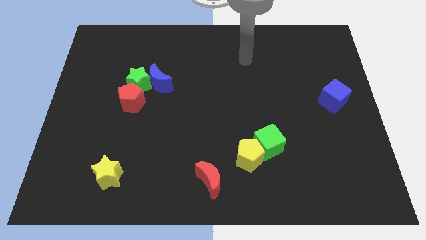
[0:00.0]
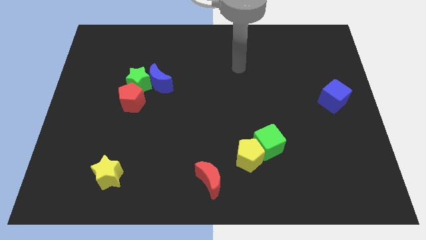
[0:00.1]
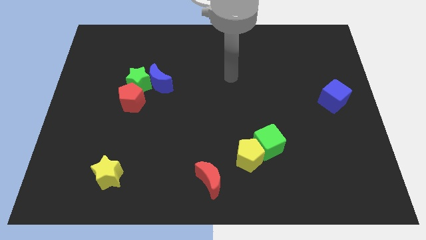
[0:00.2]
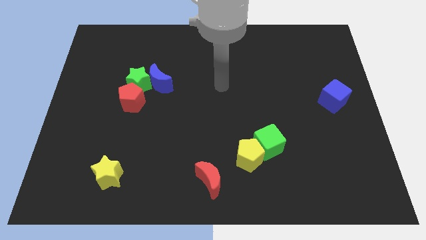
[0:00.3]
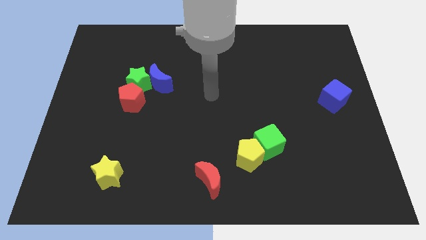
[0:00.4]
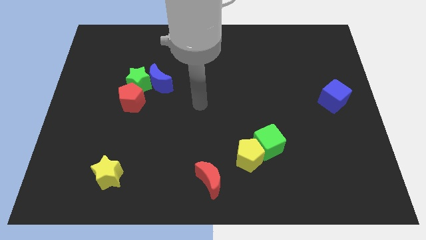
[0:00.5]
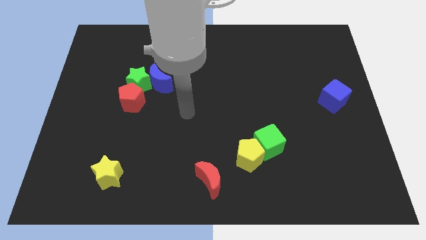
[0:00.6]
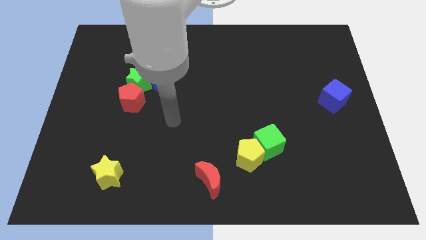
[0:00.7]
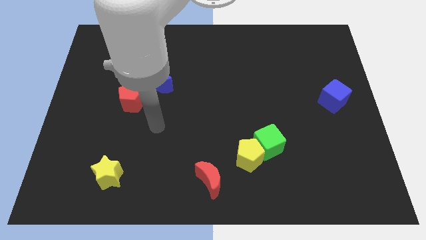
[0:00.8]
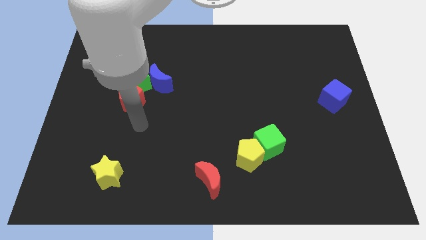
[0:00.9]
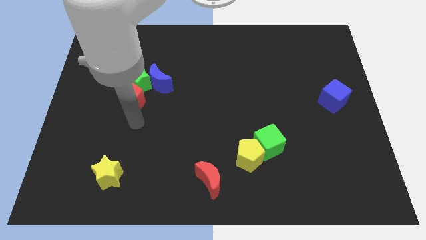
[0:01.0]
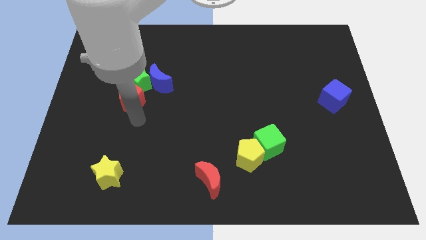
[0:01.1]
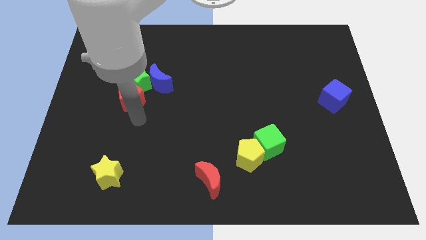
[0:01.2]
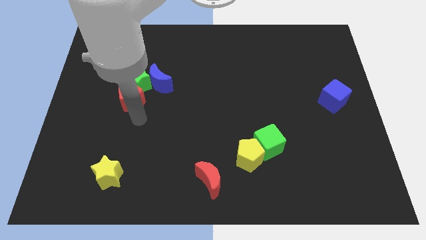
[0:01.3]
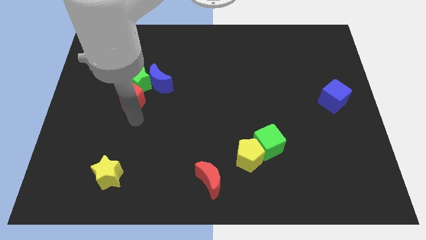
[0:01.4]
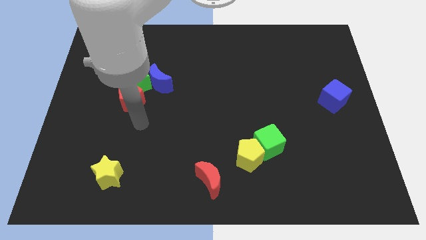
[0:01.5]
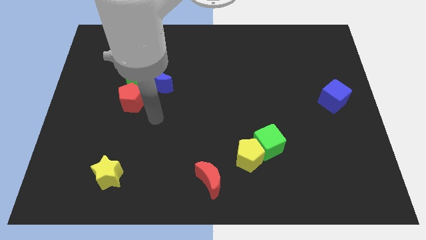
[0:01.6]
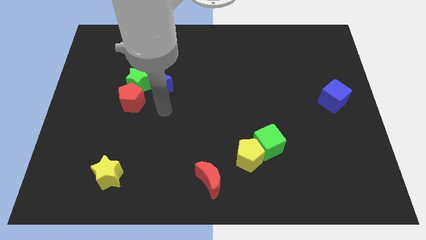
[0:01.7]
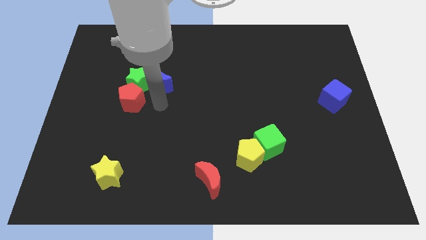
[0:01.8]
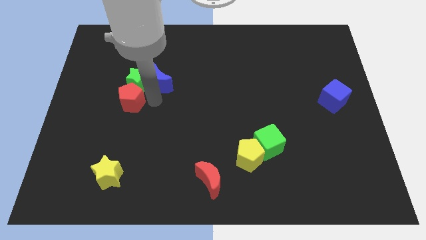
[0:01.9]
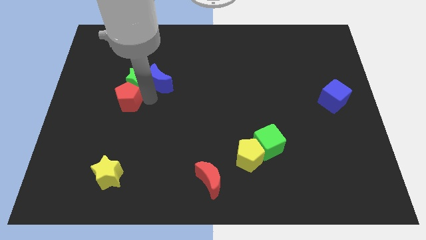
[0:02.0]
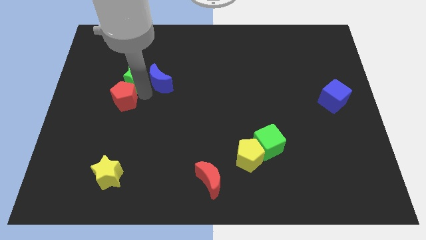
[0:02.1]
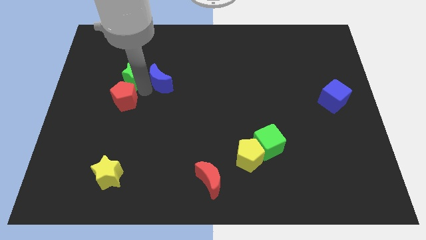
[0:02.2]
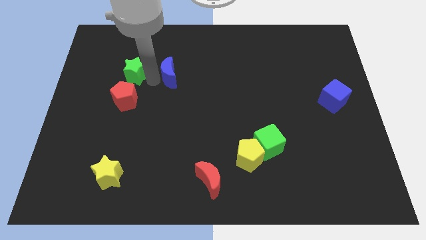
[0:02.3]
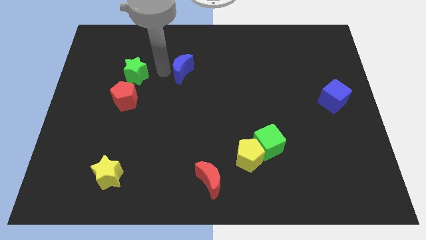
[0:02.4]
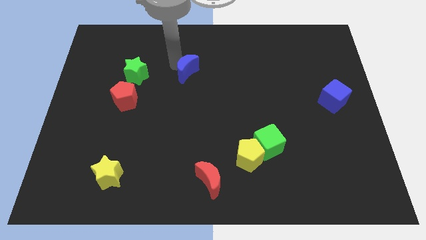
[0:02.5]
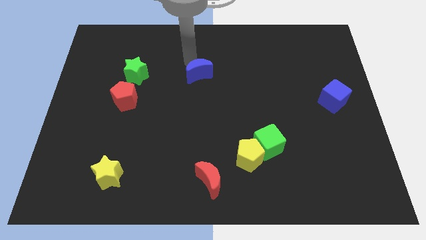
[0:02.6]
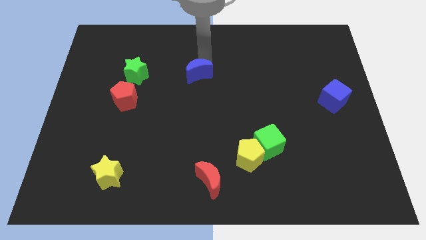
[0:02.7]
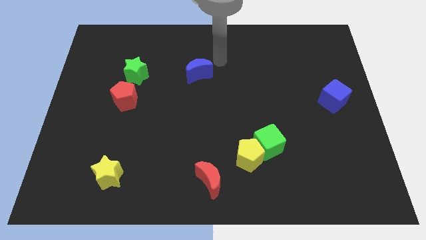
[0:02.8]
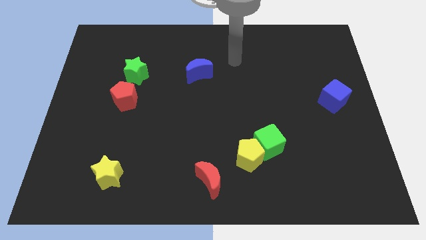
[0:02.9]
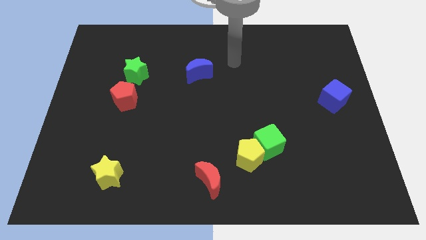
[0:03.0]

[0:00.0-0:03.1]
separate blue moon from the green star

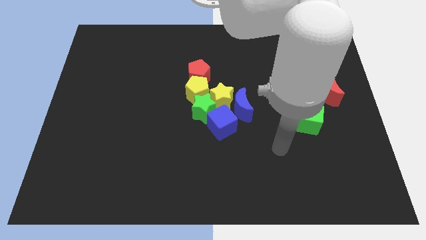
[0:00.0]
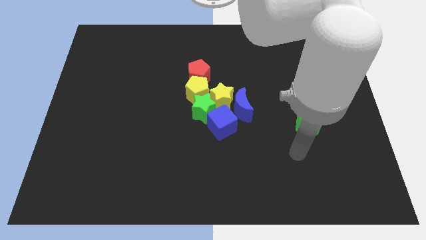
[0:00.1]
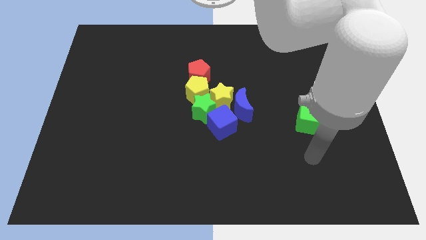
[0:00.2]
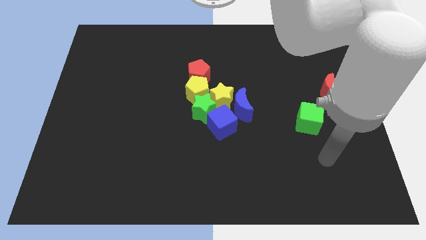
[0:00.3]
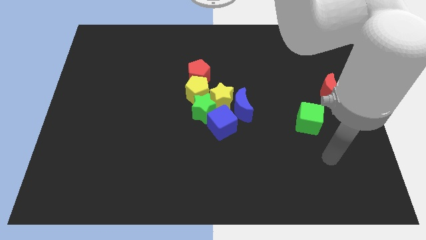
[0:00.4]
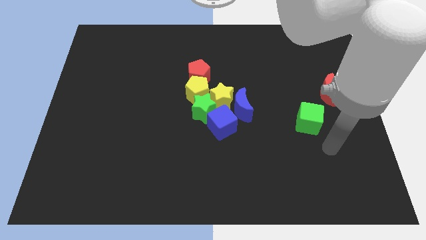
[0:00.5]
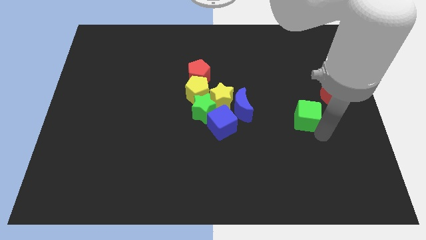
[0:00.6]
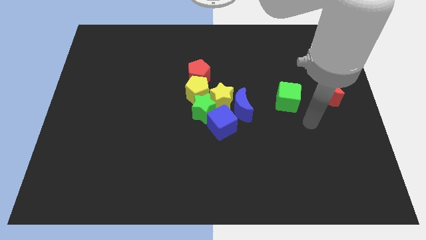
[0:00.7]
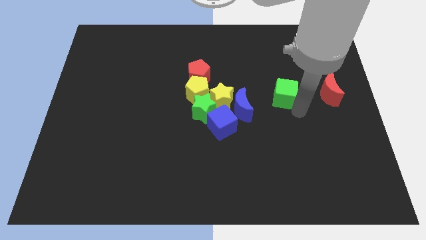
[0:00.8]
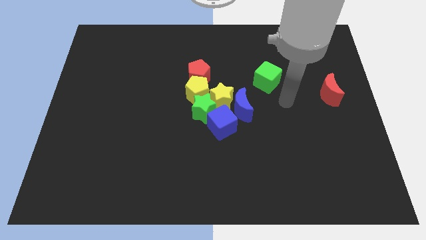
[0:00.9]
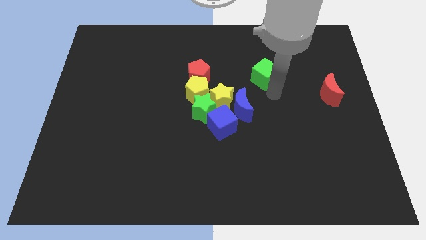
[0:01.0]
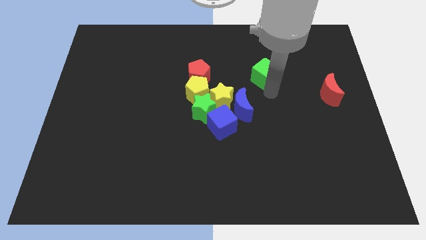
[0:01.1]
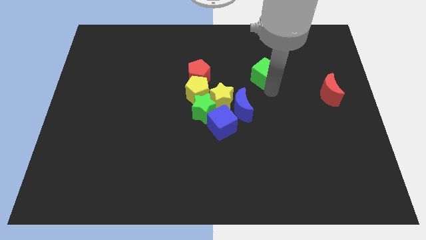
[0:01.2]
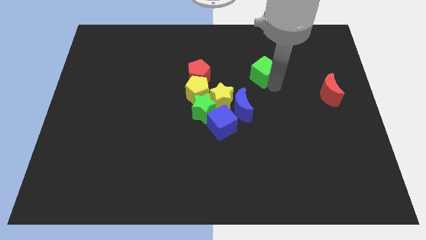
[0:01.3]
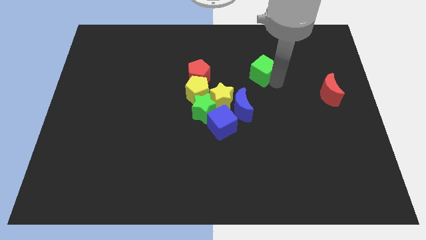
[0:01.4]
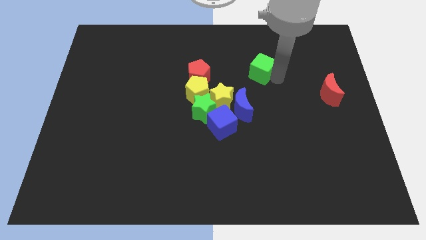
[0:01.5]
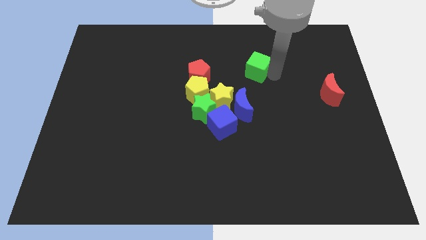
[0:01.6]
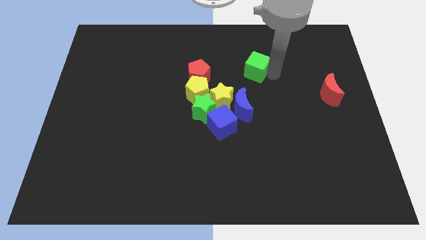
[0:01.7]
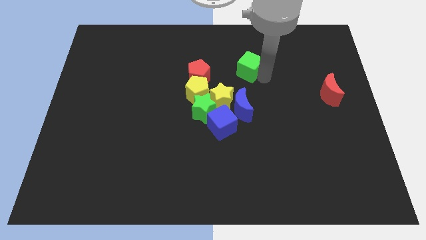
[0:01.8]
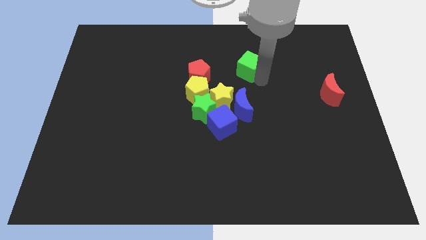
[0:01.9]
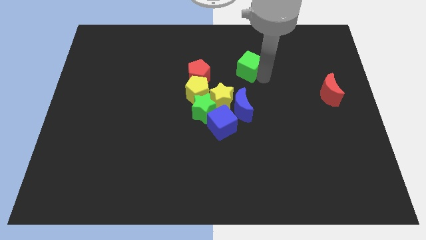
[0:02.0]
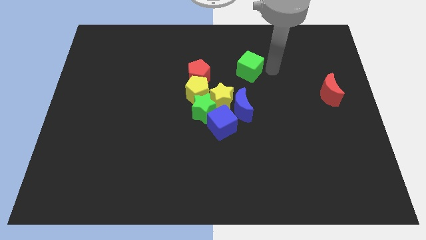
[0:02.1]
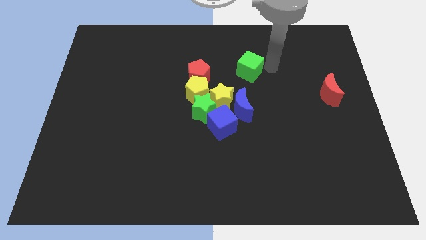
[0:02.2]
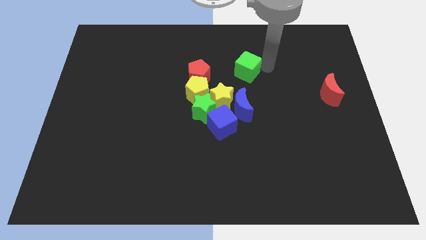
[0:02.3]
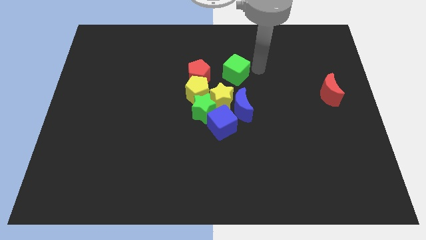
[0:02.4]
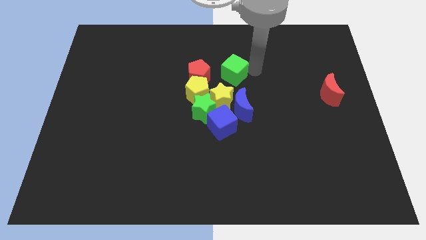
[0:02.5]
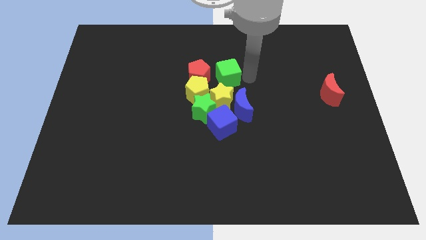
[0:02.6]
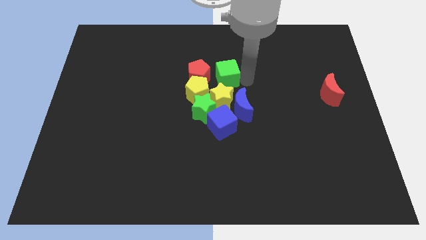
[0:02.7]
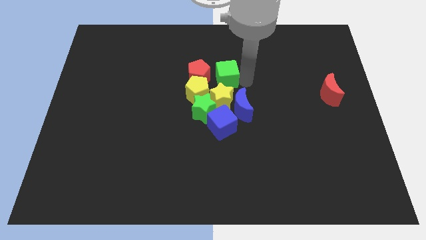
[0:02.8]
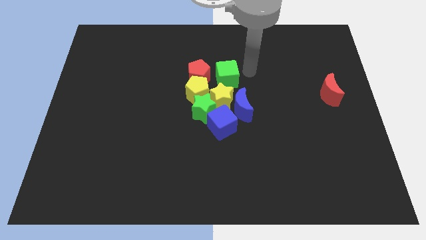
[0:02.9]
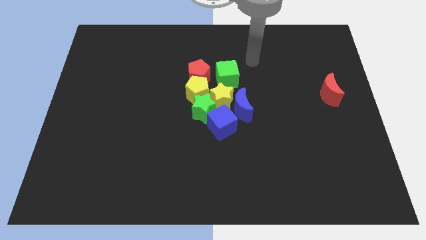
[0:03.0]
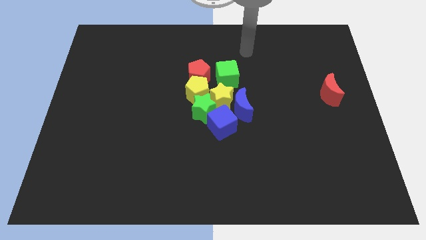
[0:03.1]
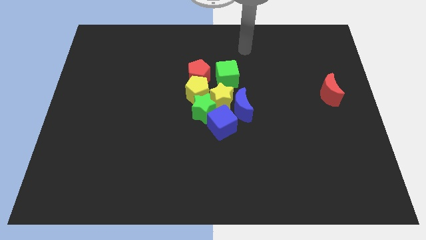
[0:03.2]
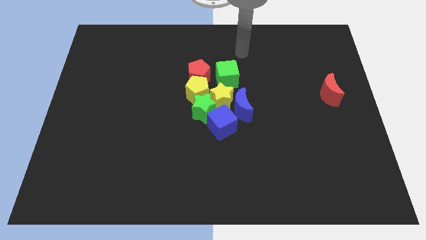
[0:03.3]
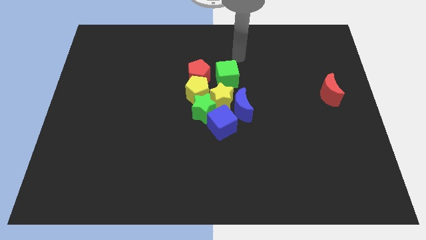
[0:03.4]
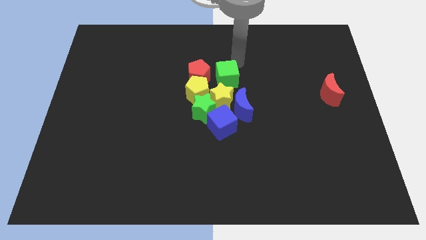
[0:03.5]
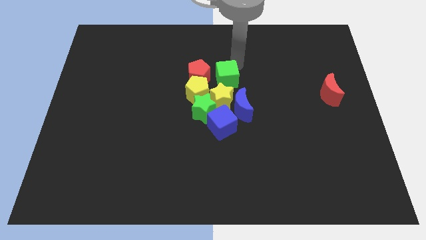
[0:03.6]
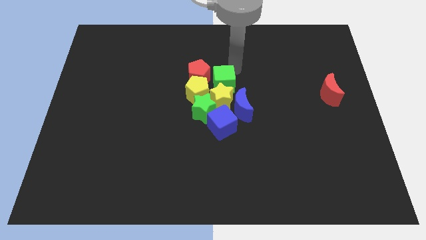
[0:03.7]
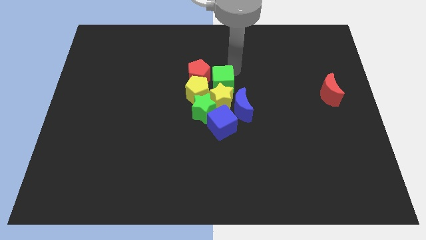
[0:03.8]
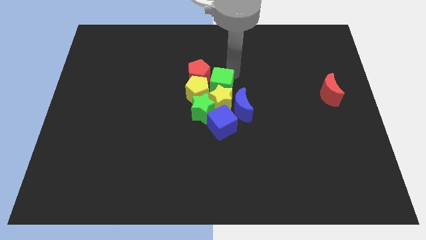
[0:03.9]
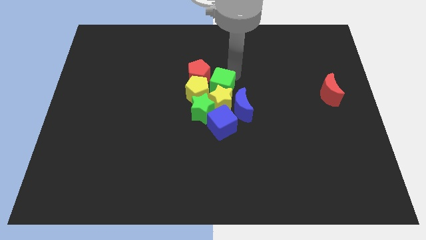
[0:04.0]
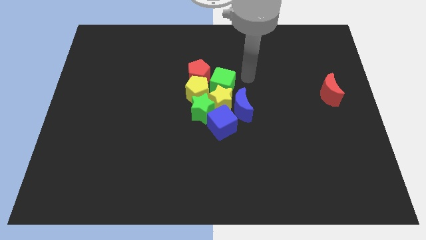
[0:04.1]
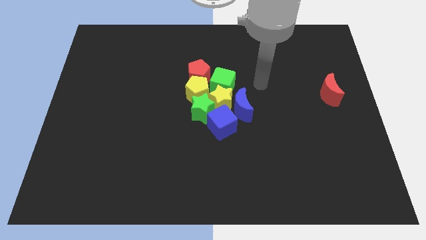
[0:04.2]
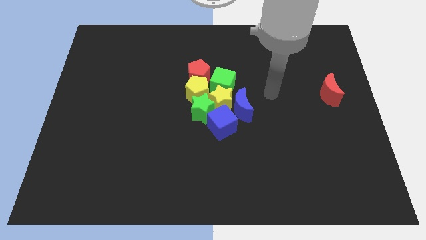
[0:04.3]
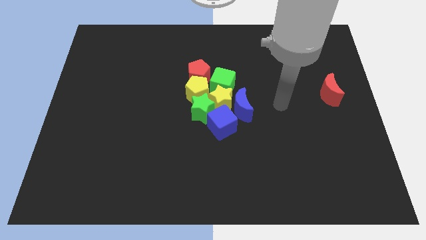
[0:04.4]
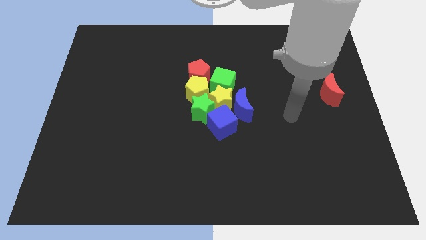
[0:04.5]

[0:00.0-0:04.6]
slide the green cube towards center of the board

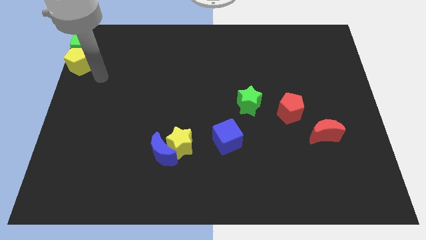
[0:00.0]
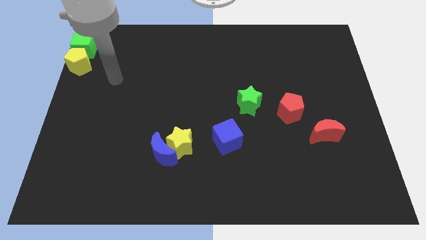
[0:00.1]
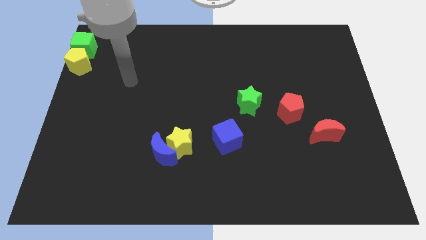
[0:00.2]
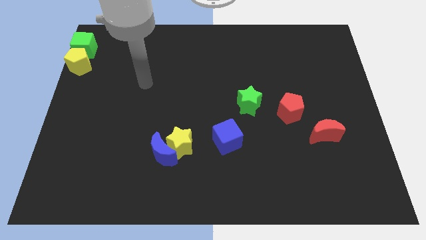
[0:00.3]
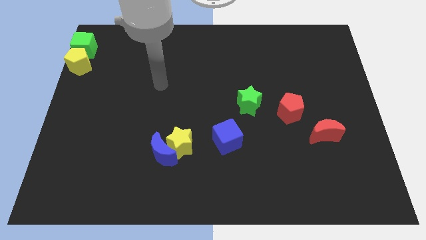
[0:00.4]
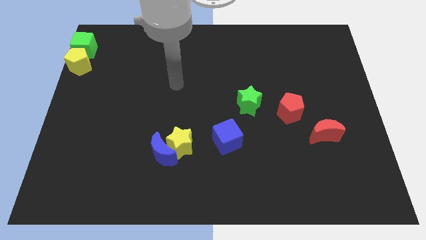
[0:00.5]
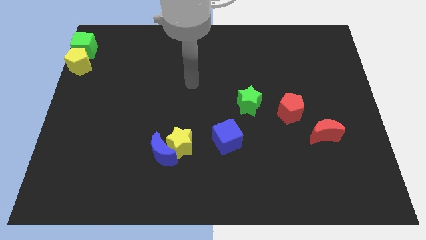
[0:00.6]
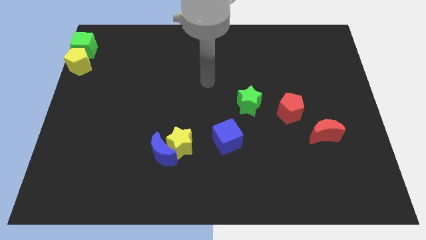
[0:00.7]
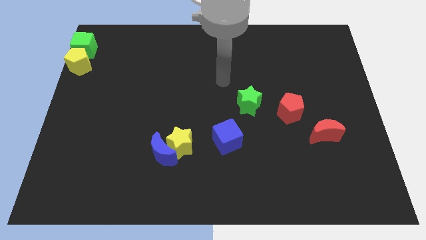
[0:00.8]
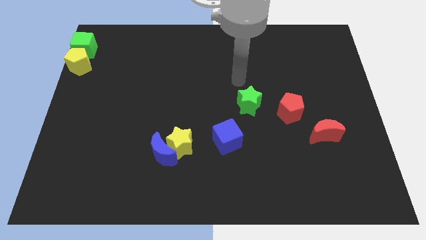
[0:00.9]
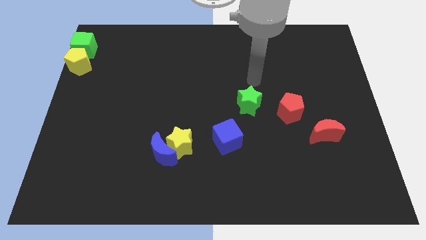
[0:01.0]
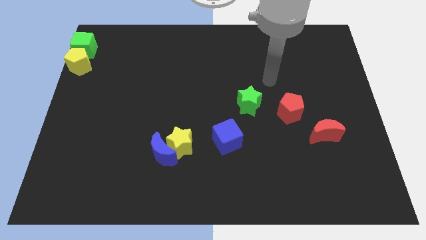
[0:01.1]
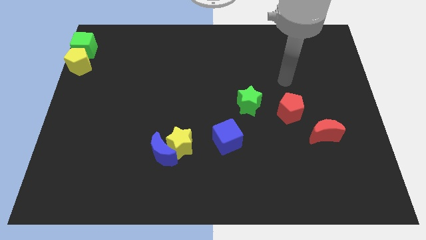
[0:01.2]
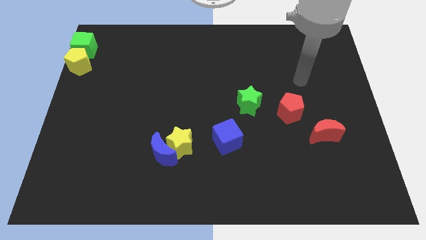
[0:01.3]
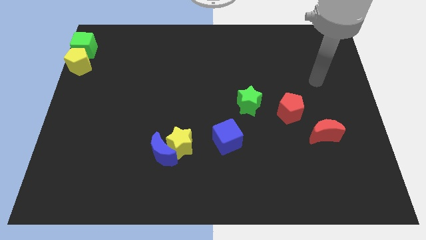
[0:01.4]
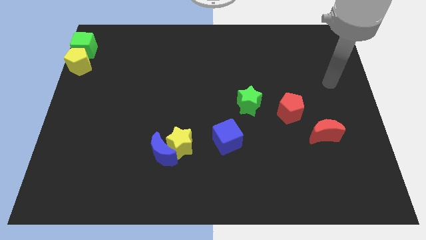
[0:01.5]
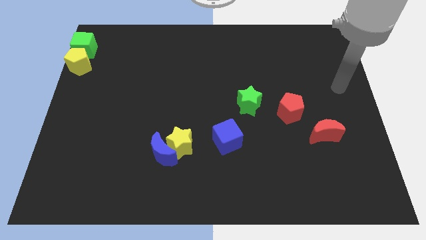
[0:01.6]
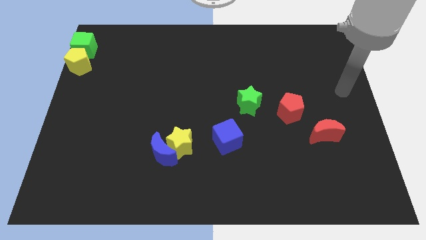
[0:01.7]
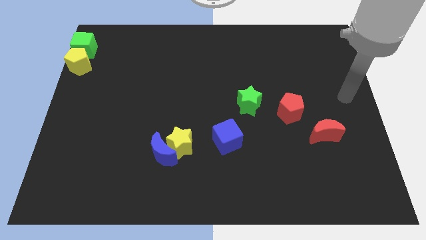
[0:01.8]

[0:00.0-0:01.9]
move yourself away from the yellow pentagon
